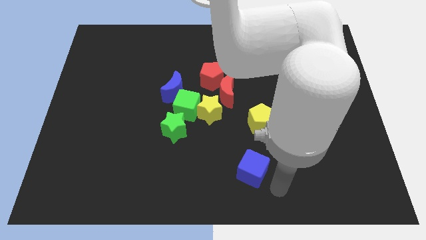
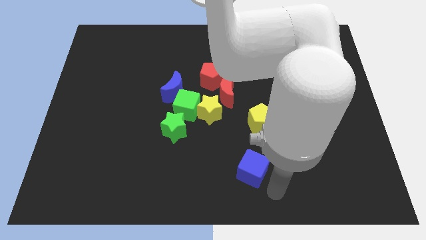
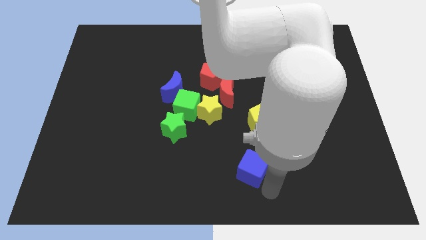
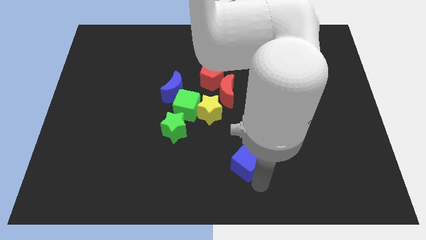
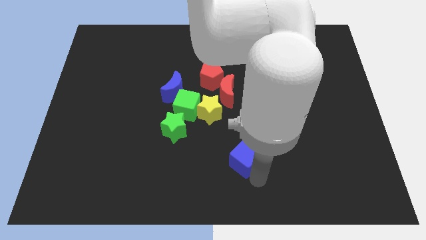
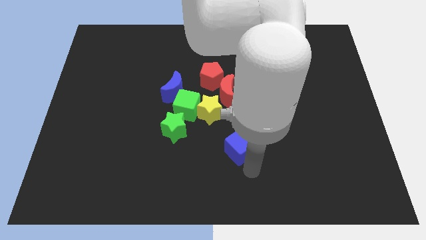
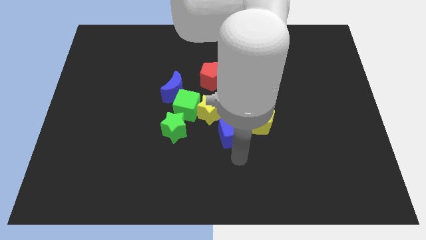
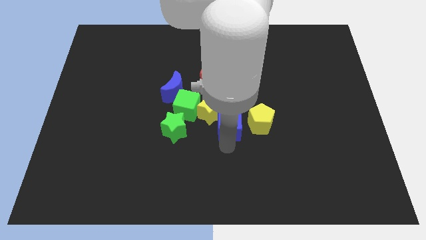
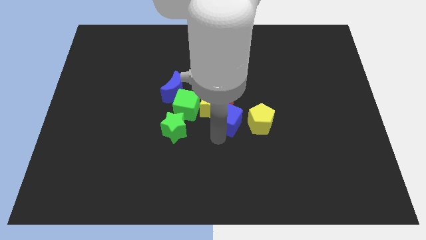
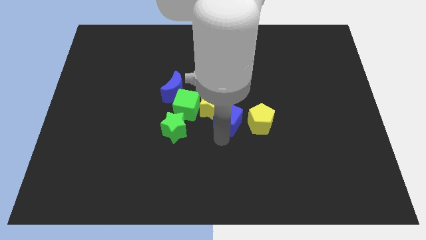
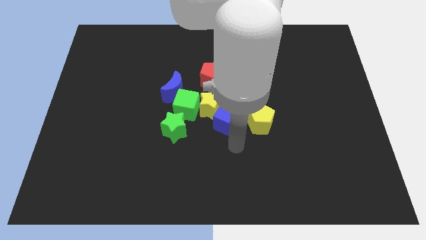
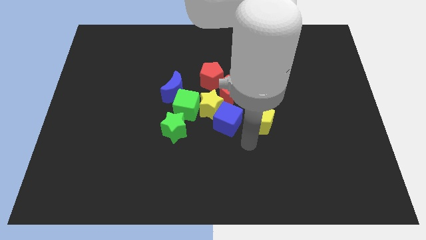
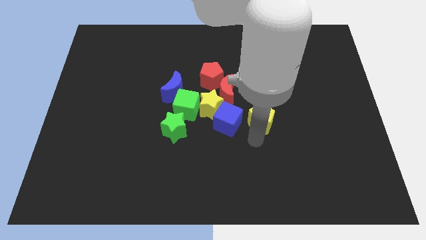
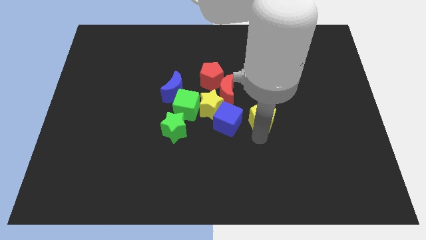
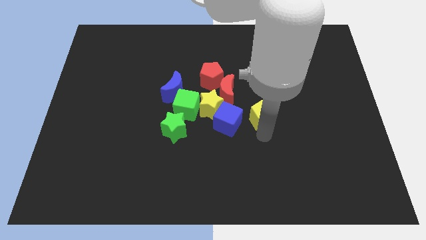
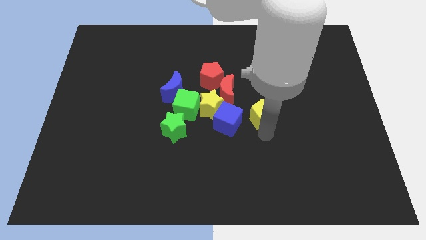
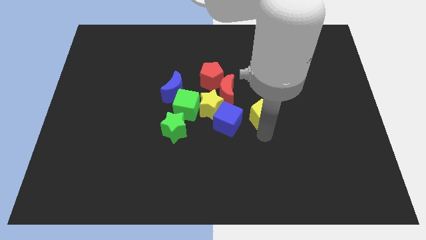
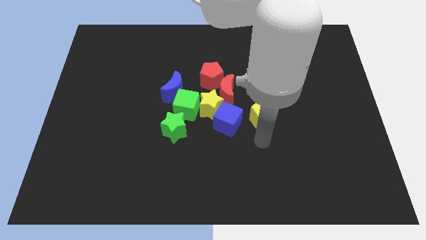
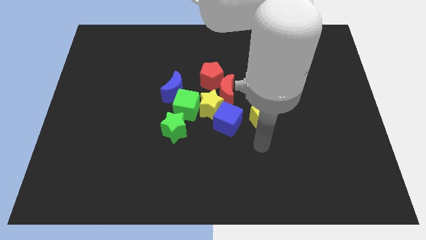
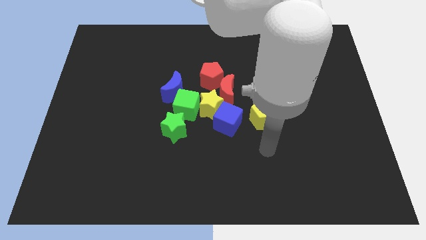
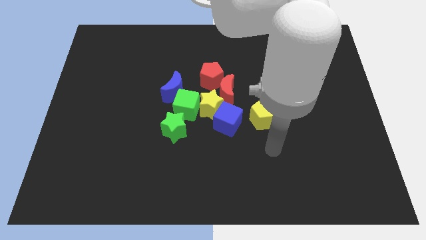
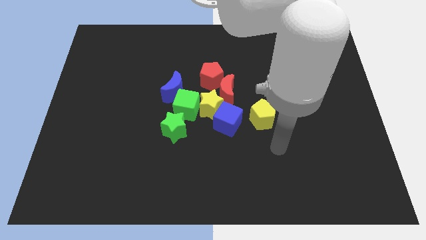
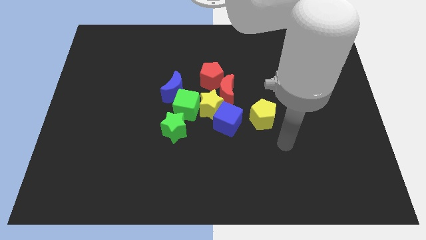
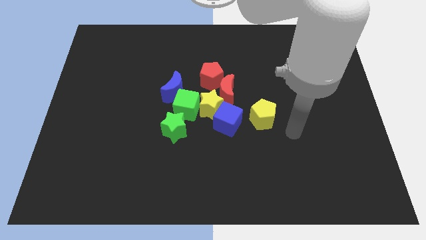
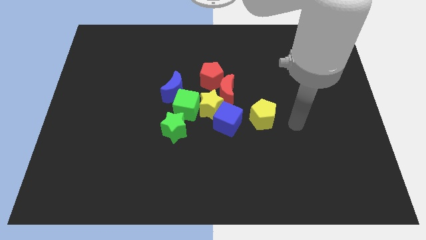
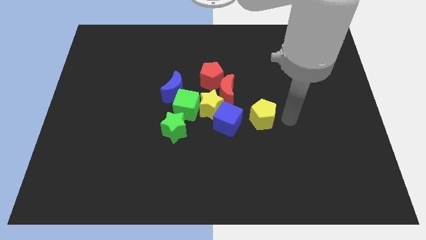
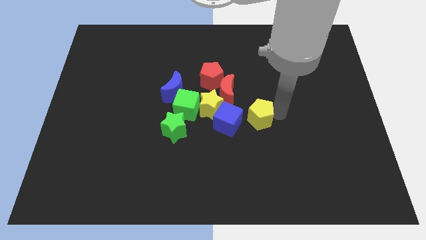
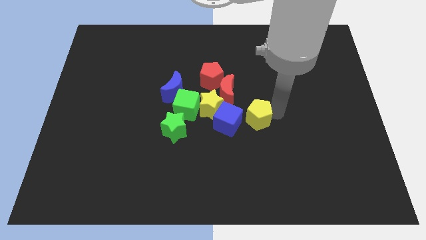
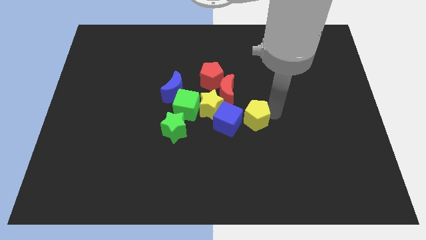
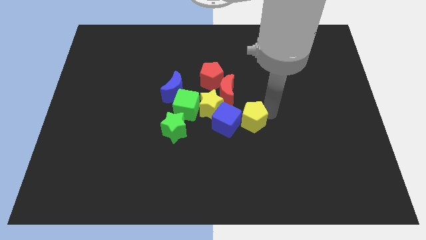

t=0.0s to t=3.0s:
push the blue cube into the yellow star

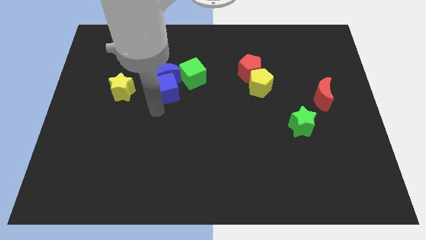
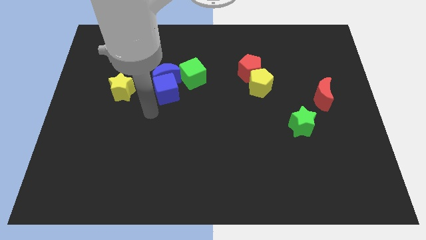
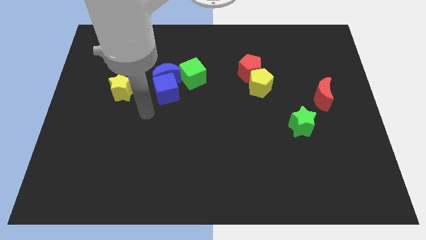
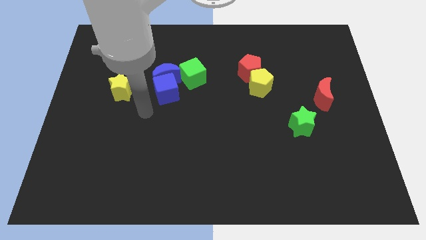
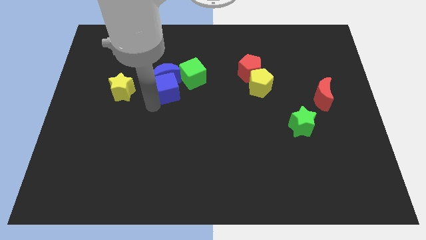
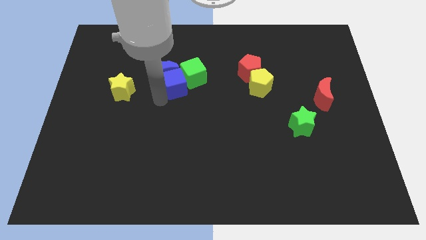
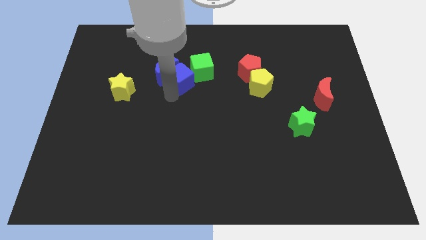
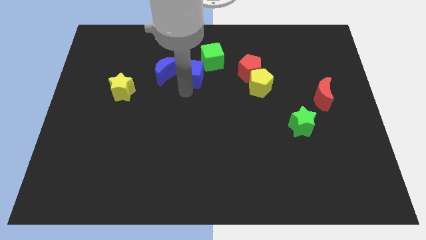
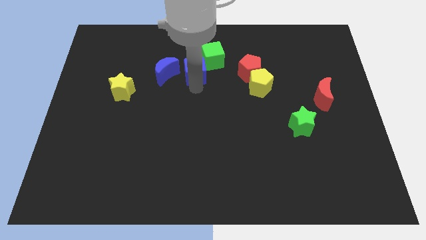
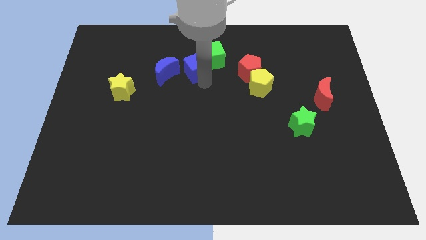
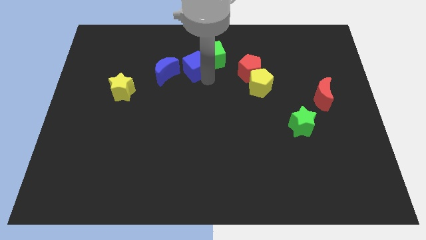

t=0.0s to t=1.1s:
push the blue cube into the green cube

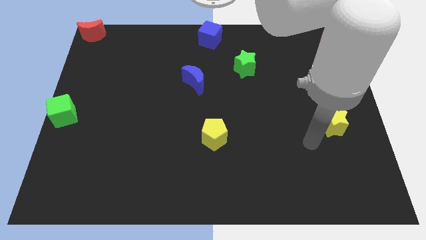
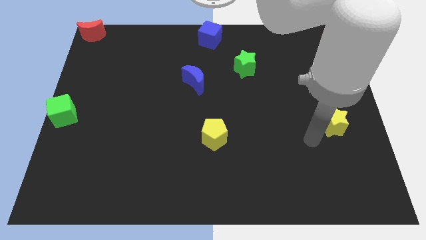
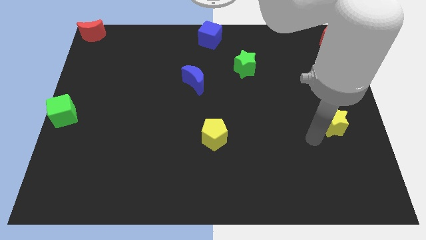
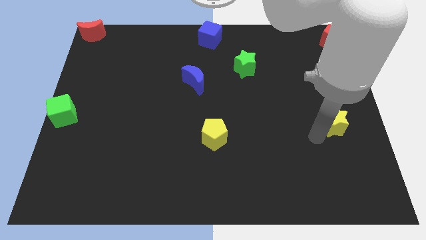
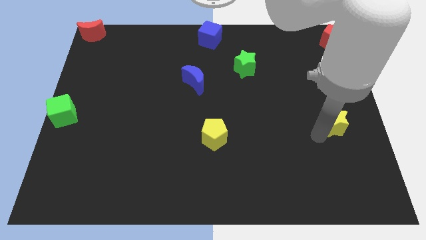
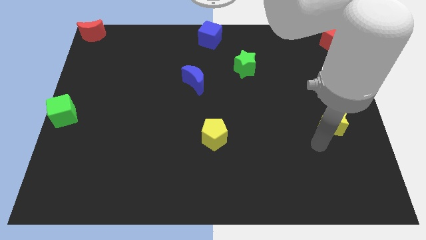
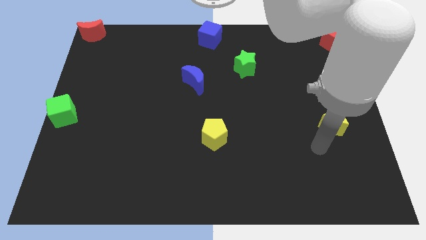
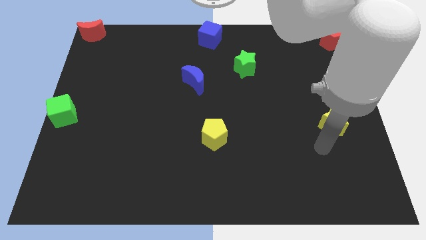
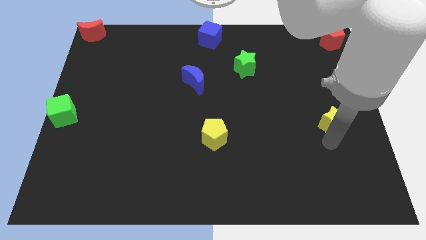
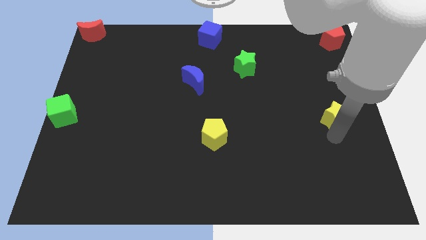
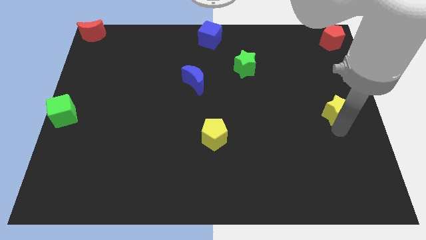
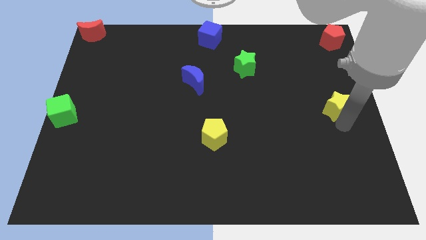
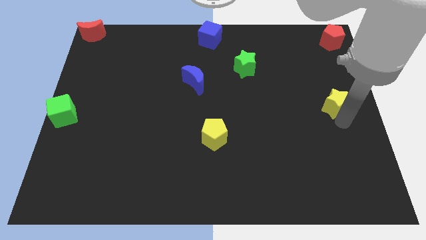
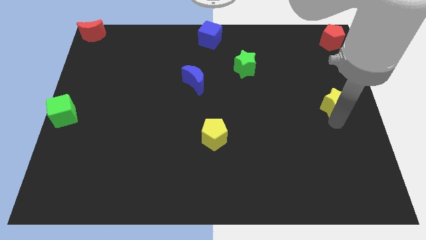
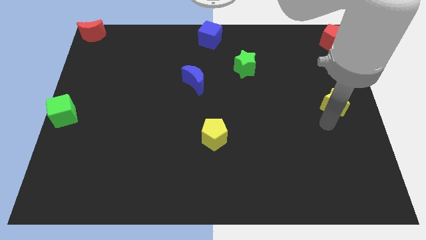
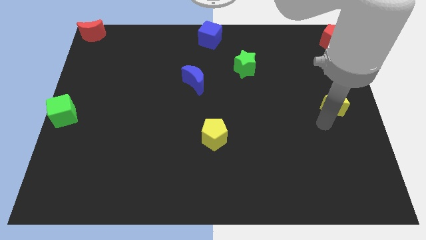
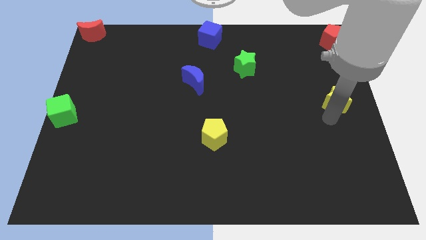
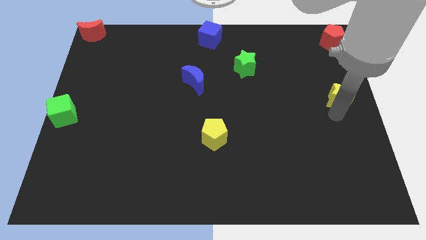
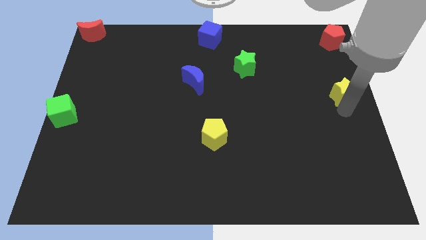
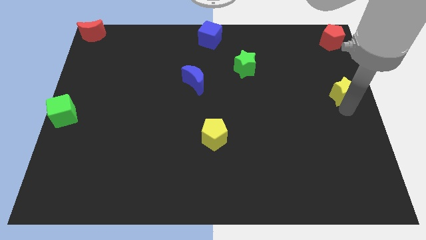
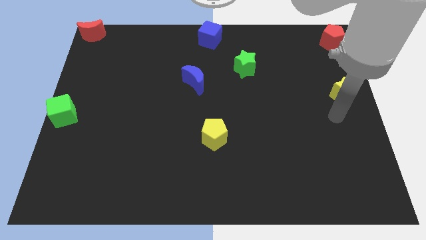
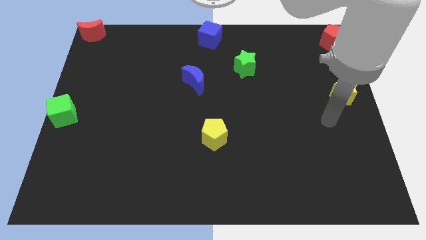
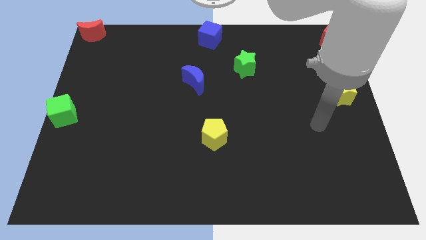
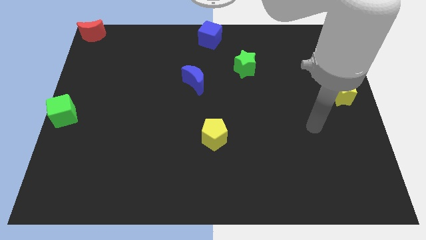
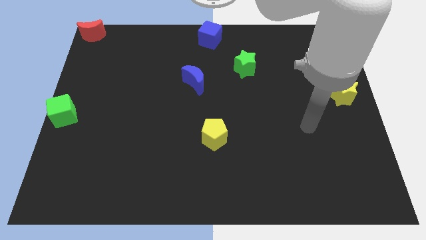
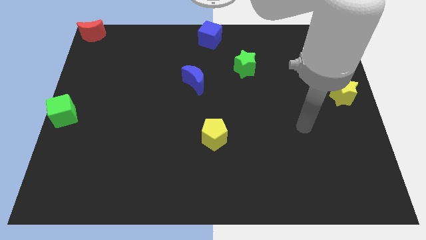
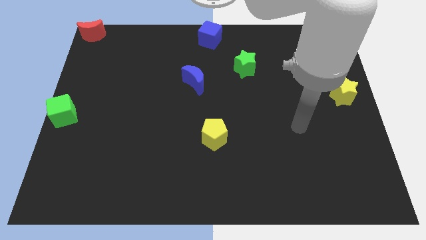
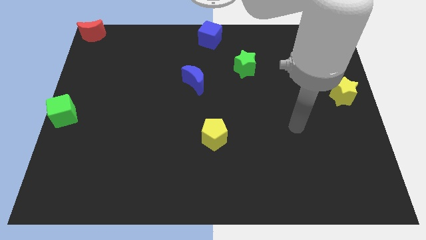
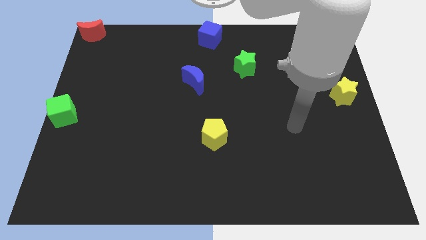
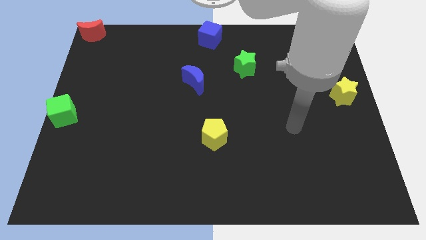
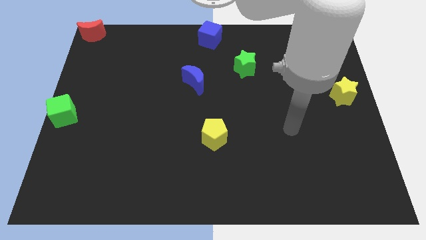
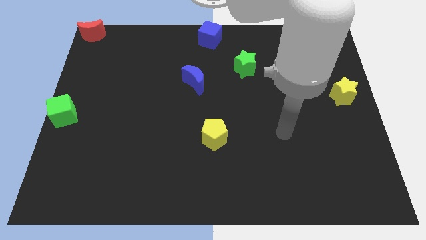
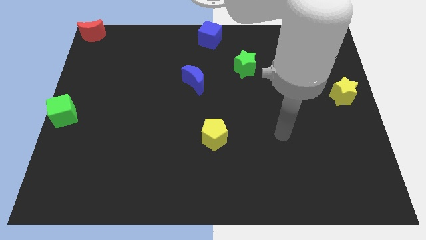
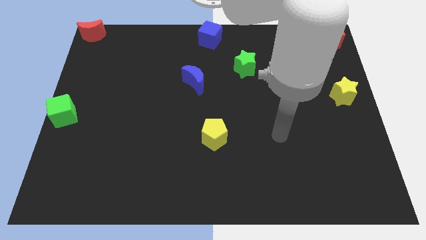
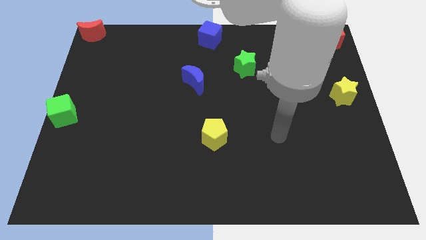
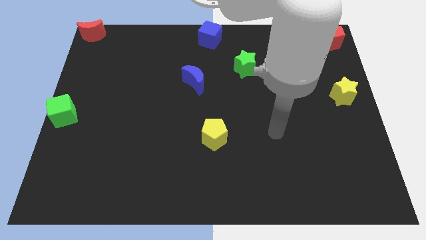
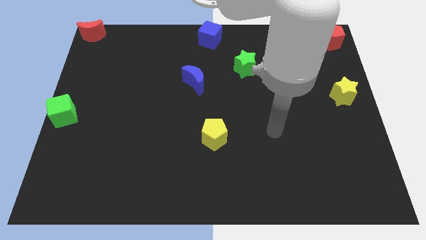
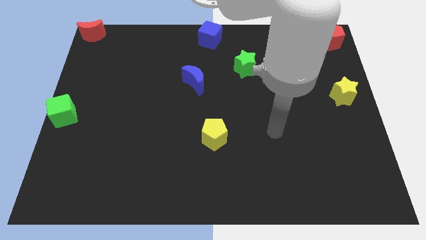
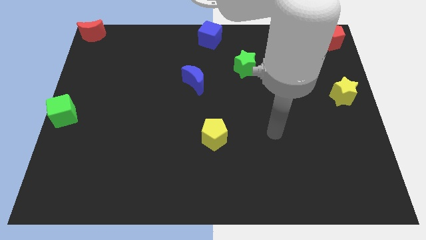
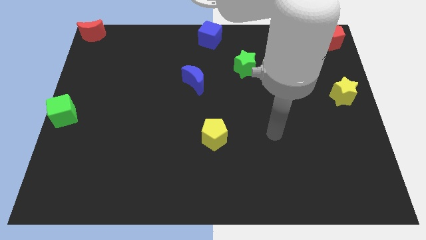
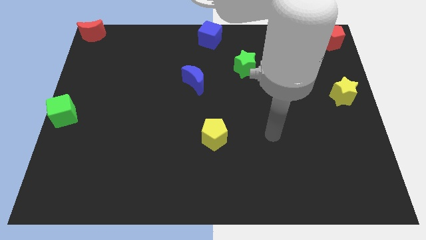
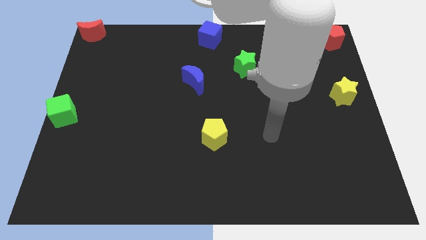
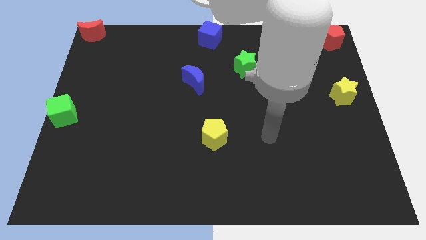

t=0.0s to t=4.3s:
move your arm away from the yellow star

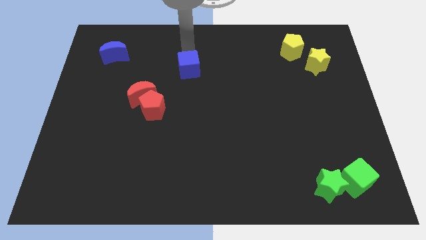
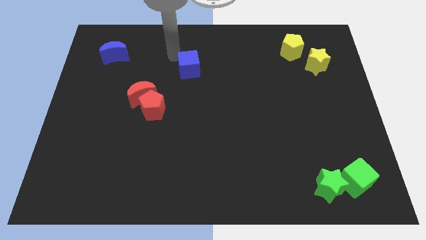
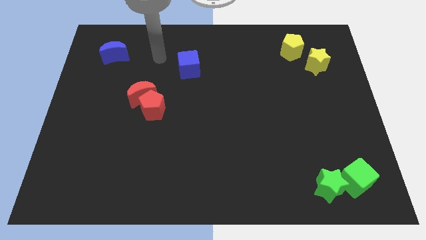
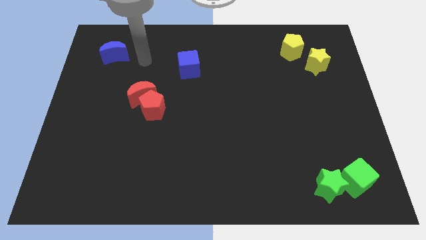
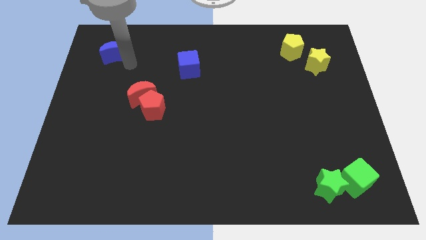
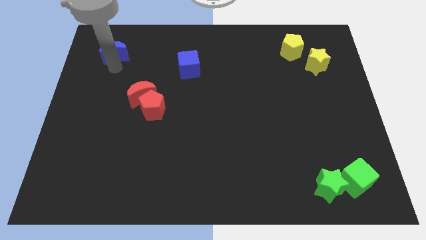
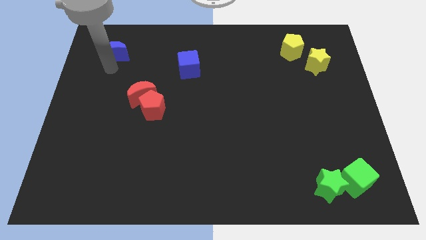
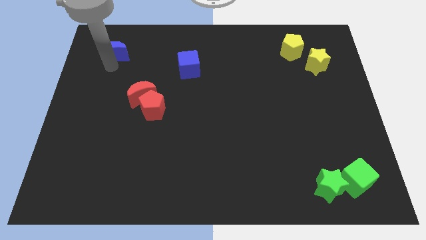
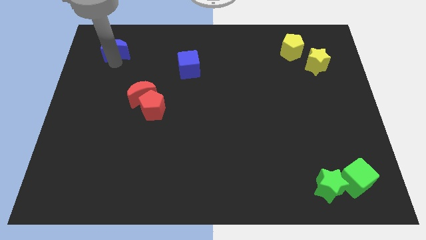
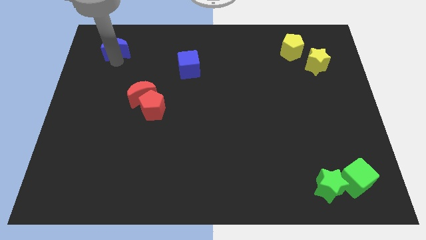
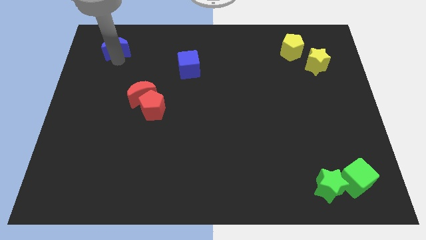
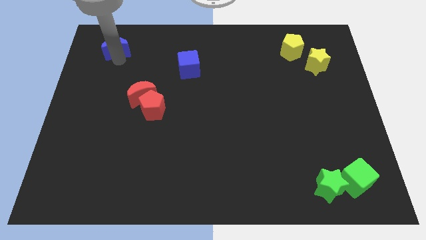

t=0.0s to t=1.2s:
tap the blue crescent
